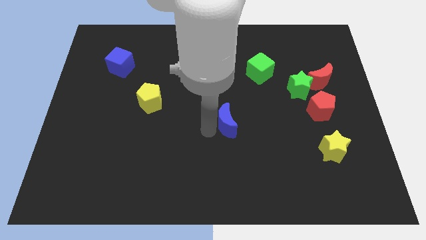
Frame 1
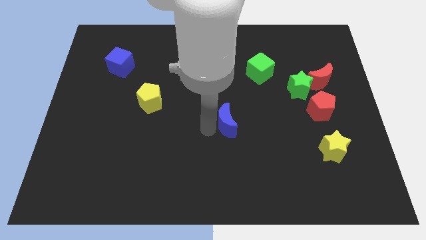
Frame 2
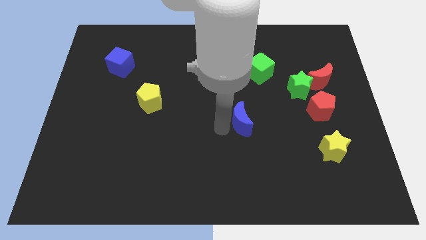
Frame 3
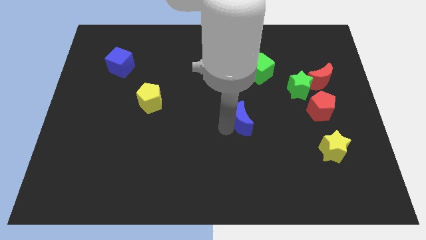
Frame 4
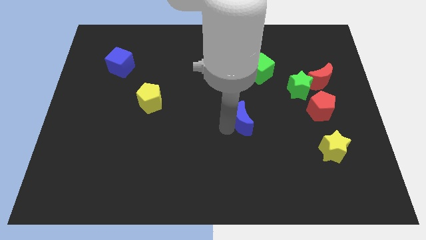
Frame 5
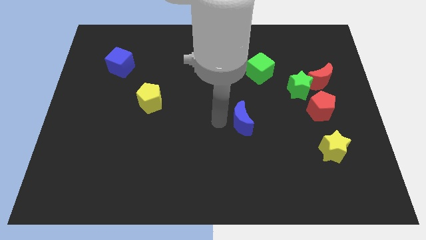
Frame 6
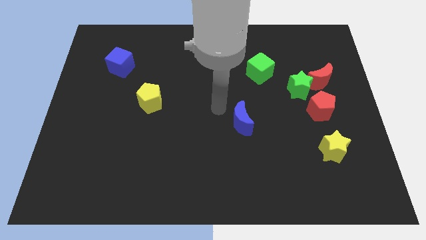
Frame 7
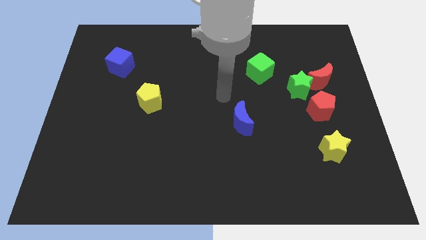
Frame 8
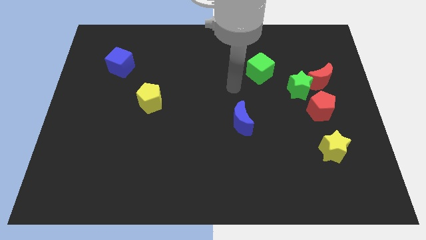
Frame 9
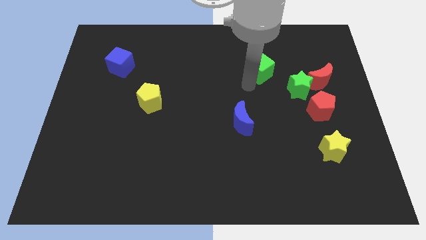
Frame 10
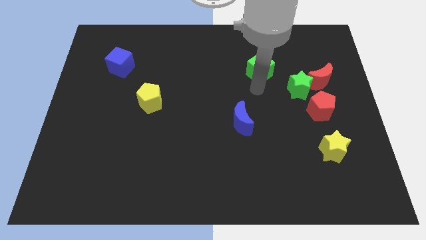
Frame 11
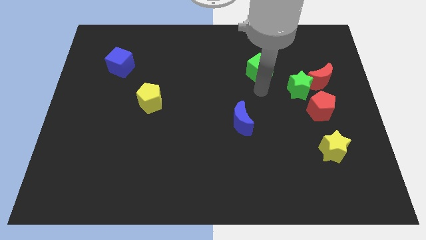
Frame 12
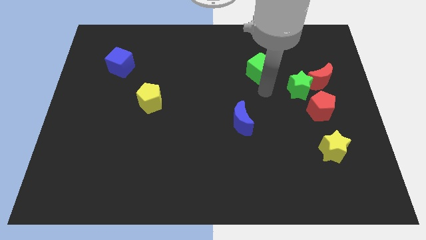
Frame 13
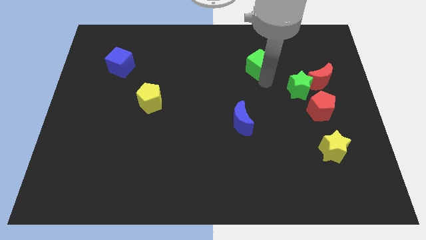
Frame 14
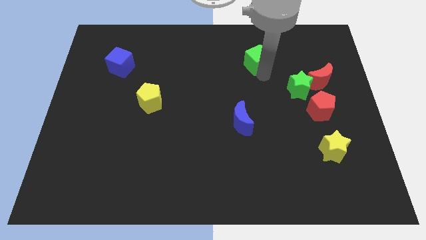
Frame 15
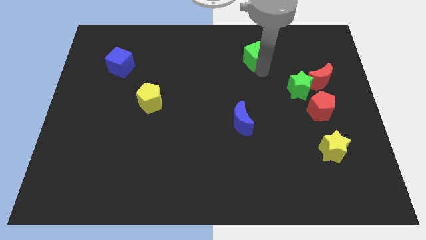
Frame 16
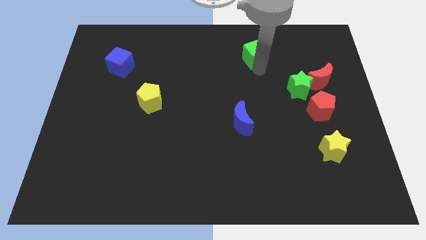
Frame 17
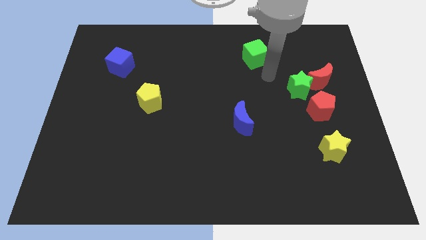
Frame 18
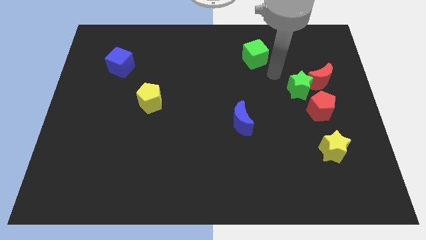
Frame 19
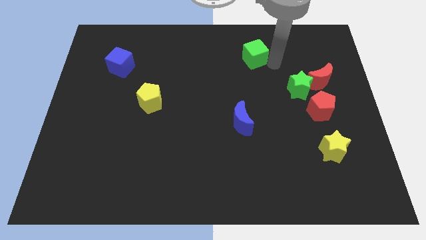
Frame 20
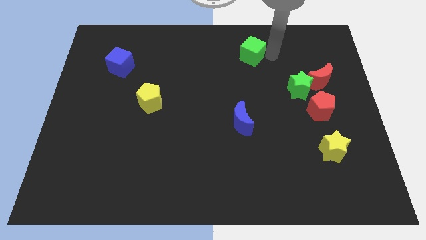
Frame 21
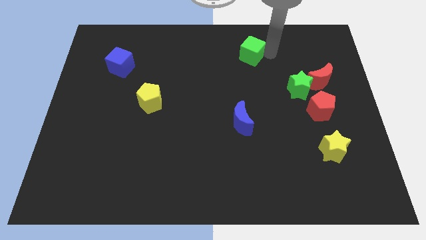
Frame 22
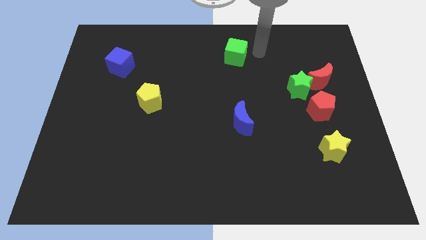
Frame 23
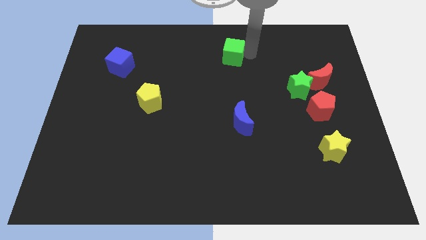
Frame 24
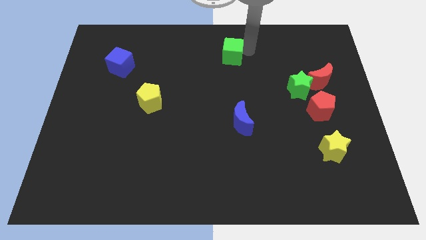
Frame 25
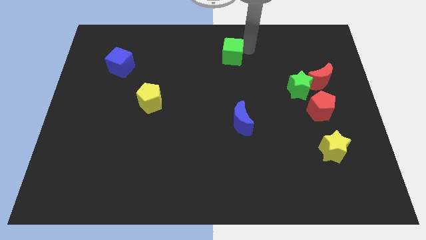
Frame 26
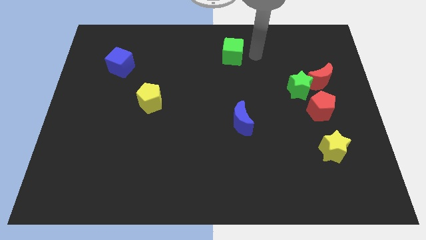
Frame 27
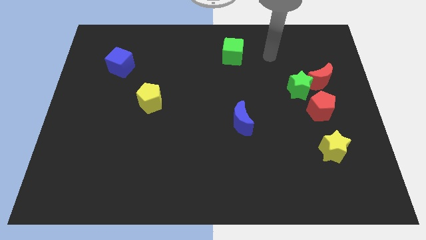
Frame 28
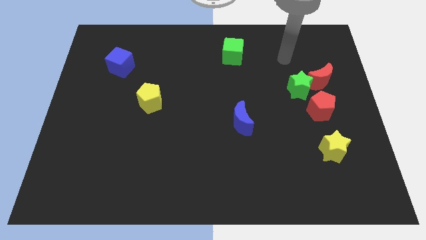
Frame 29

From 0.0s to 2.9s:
push the green cube to the top center of the board

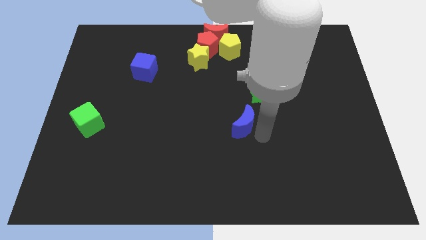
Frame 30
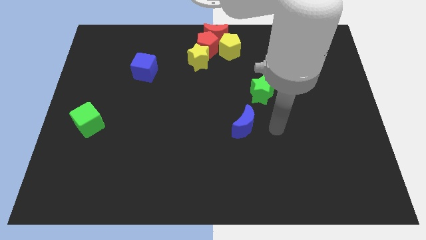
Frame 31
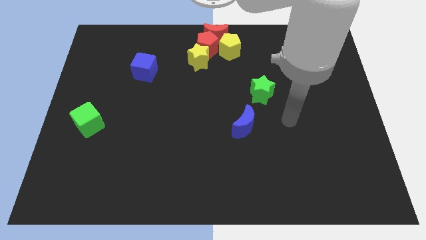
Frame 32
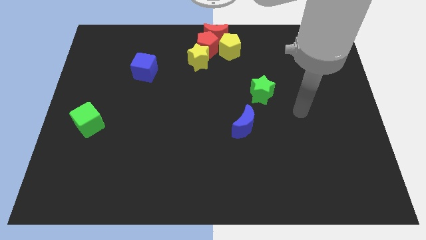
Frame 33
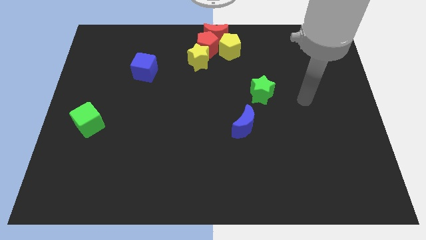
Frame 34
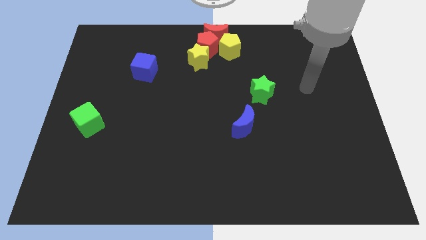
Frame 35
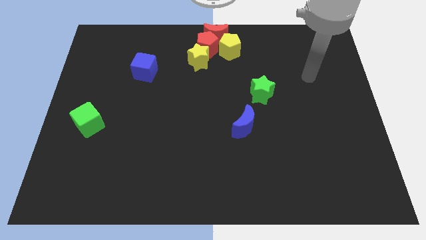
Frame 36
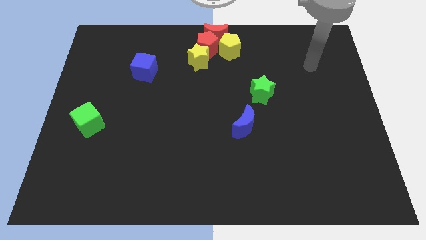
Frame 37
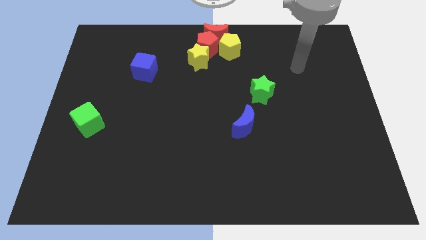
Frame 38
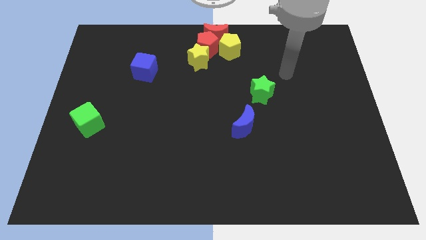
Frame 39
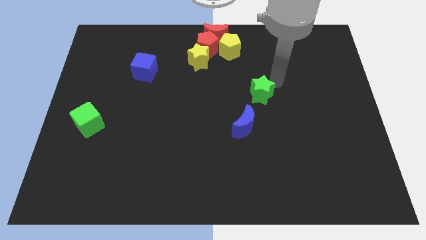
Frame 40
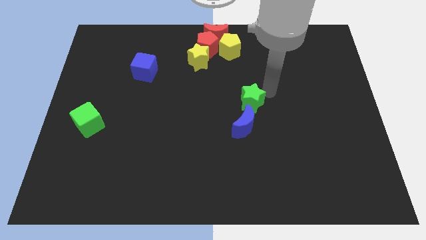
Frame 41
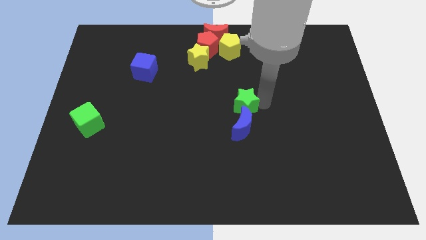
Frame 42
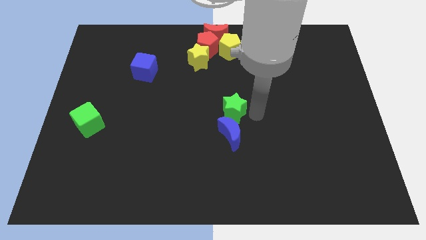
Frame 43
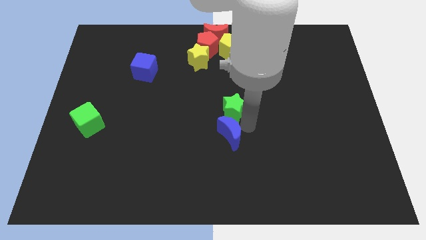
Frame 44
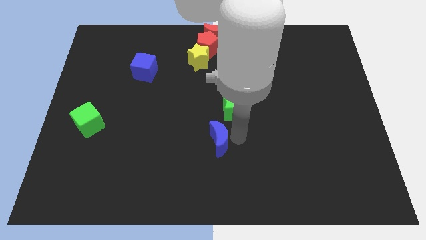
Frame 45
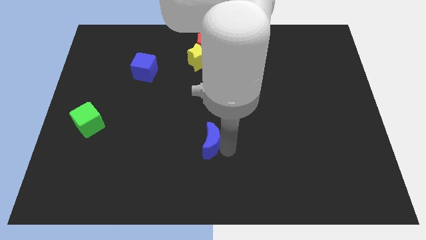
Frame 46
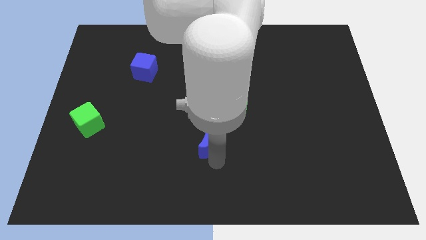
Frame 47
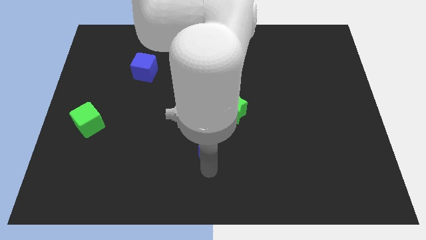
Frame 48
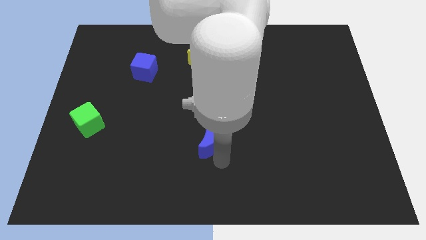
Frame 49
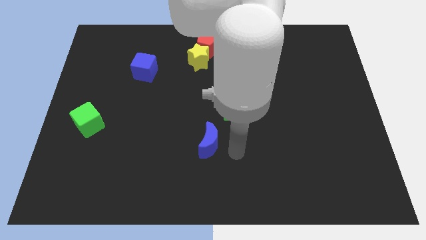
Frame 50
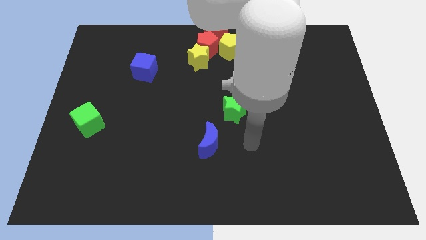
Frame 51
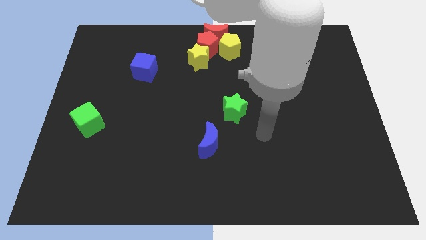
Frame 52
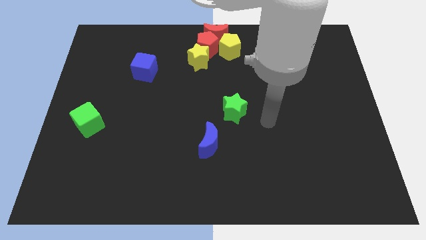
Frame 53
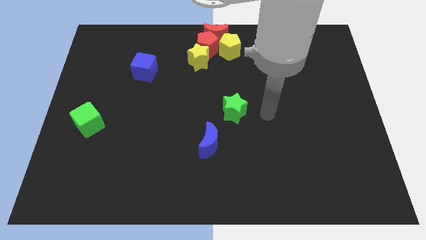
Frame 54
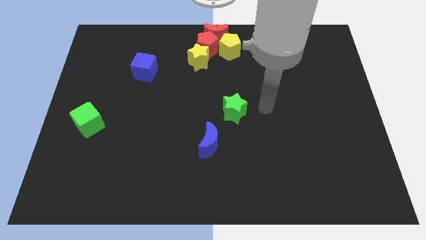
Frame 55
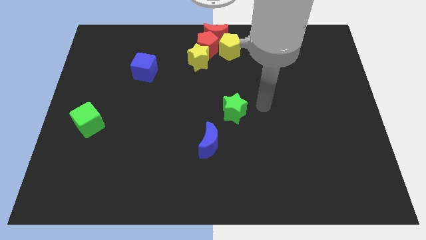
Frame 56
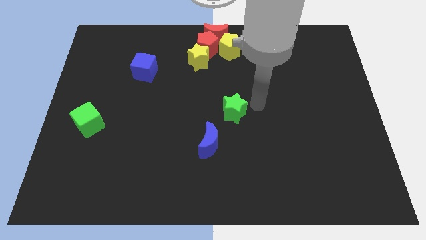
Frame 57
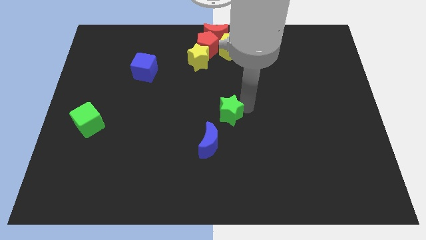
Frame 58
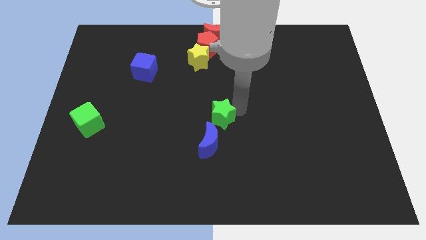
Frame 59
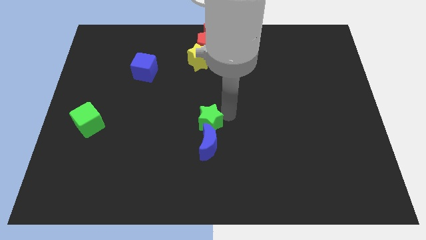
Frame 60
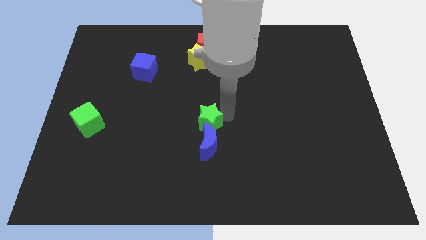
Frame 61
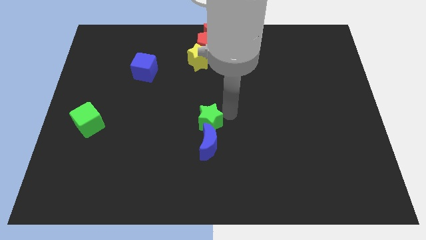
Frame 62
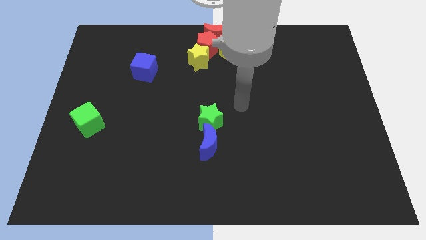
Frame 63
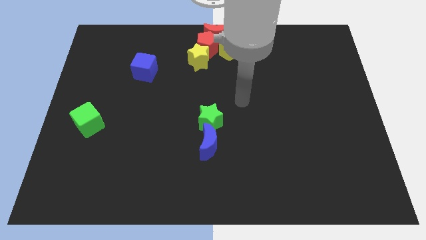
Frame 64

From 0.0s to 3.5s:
push the blue crescent and green star together at the bottom side of the group of blocks

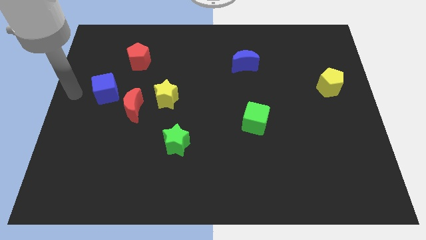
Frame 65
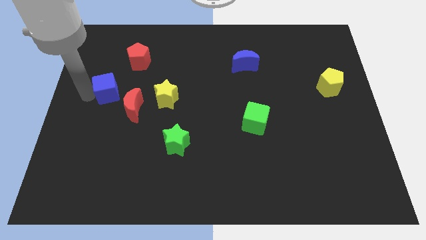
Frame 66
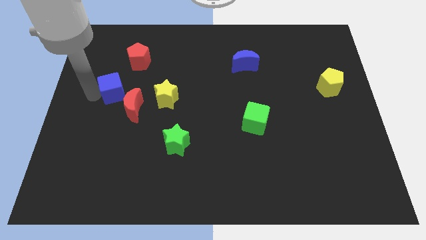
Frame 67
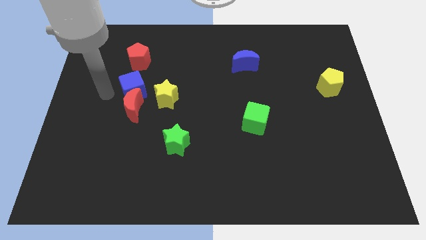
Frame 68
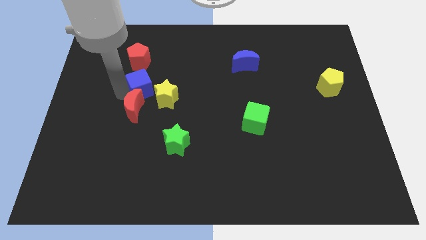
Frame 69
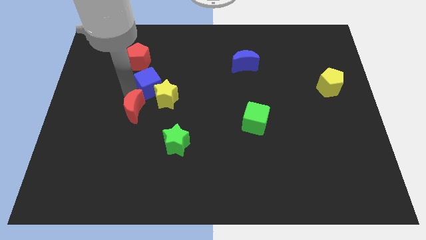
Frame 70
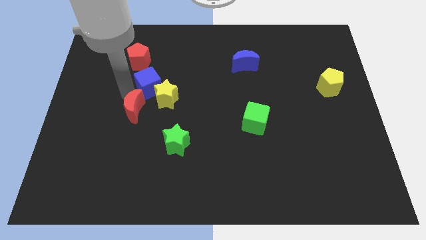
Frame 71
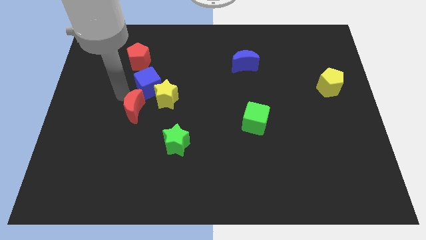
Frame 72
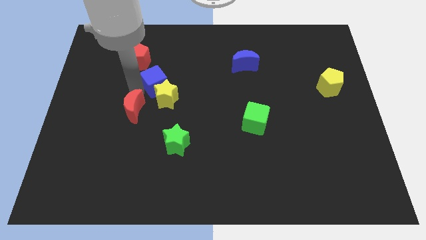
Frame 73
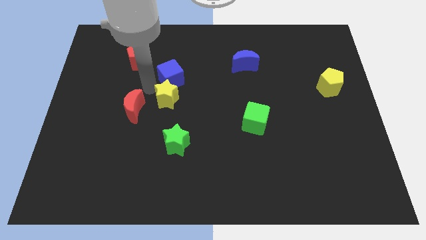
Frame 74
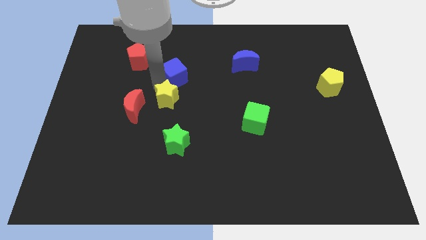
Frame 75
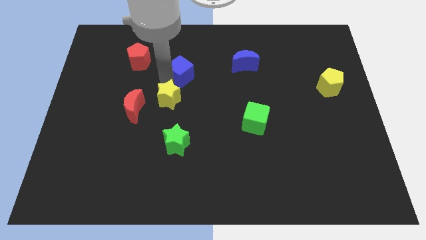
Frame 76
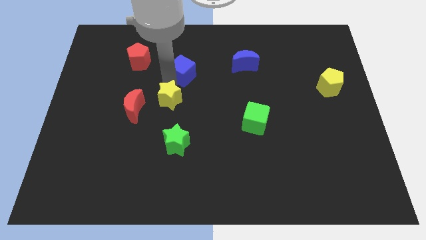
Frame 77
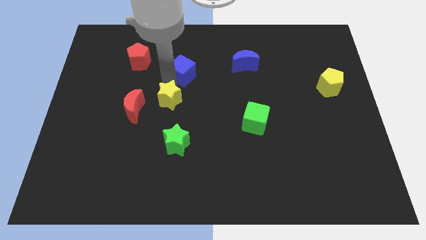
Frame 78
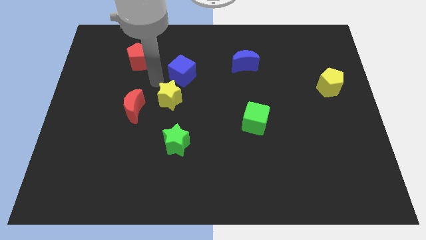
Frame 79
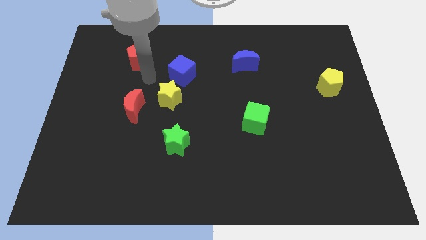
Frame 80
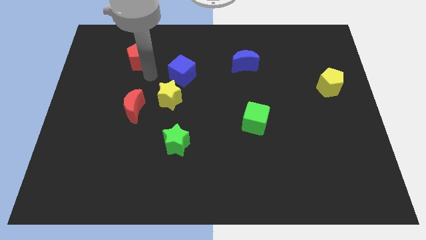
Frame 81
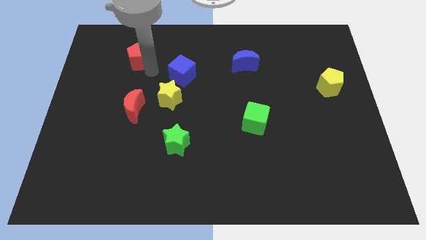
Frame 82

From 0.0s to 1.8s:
place the ble cube above the yellow star

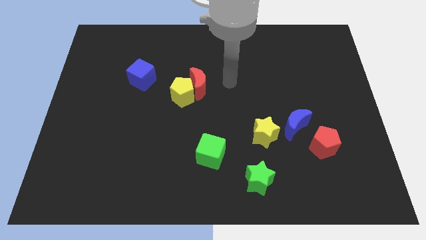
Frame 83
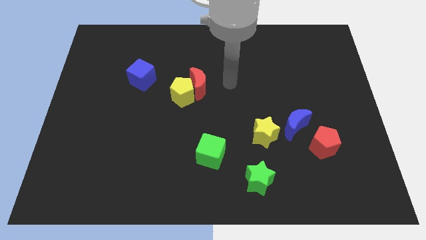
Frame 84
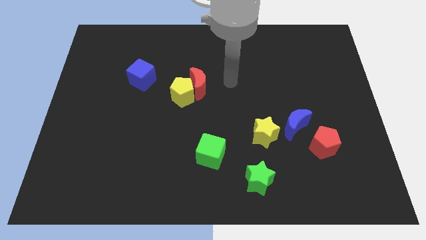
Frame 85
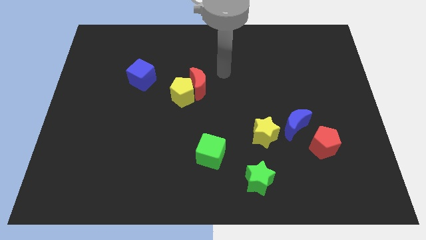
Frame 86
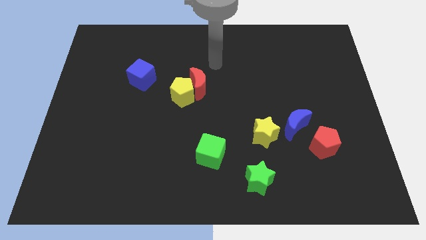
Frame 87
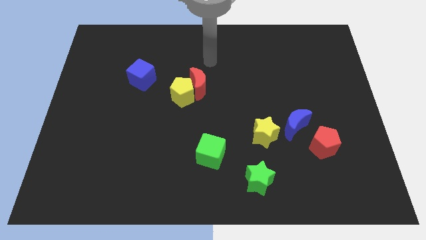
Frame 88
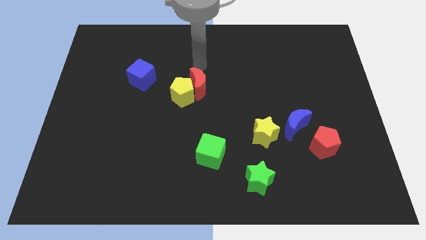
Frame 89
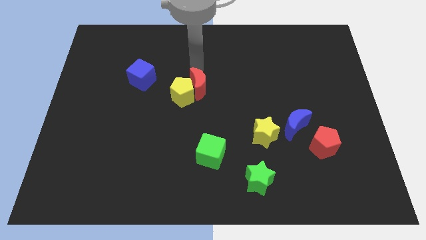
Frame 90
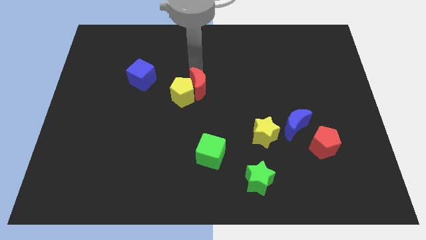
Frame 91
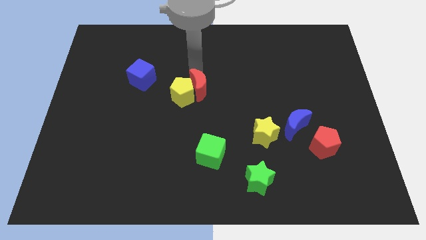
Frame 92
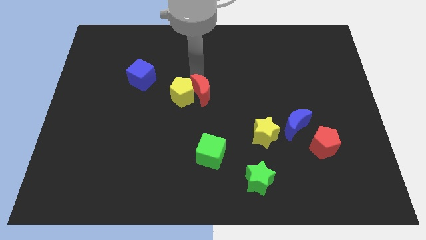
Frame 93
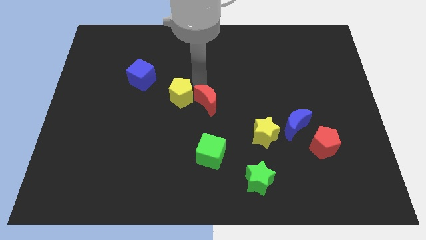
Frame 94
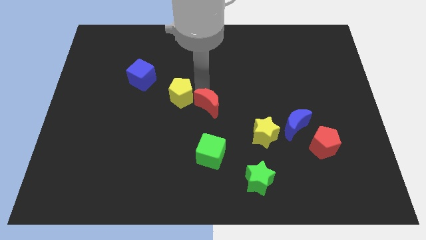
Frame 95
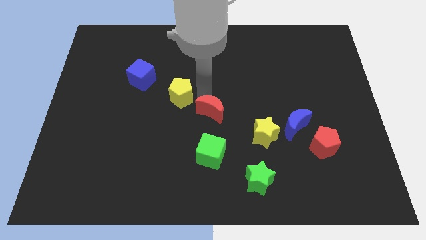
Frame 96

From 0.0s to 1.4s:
separate the yellow pentagon from the red crescent
